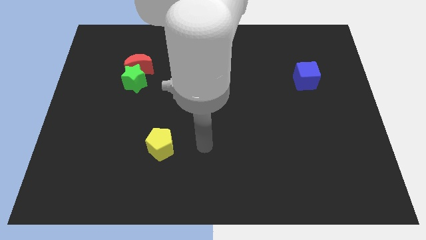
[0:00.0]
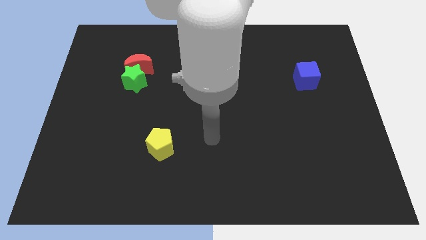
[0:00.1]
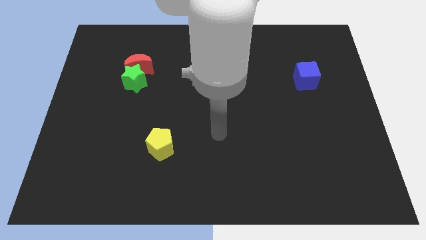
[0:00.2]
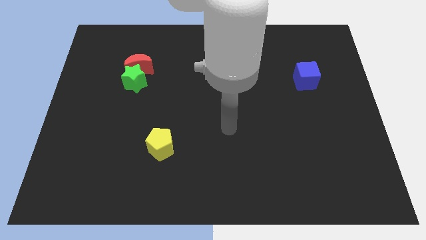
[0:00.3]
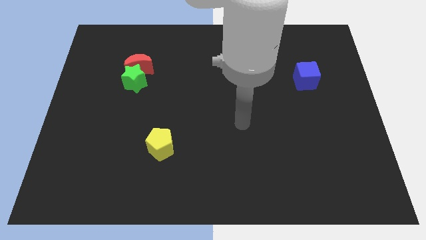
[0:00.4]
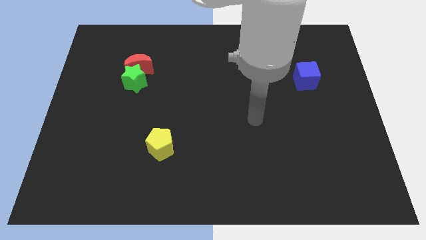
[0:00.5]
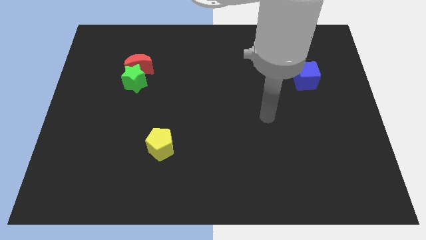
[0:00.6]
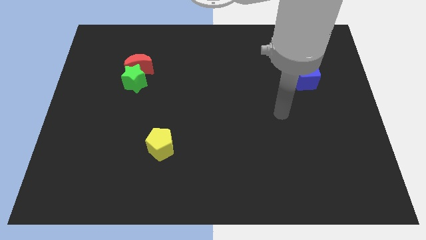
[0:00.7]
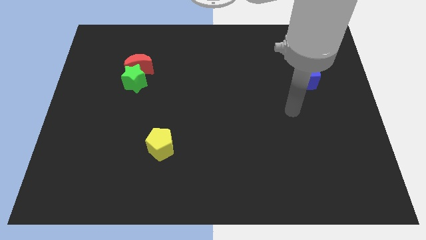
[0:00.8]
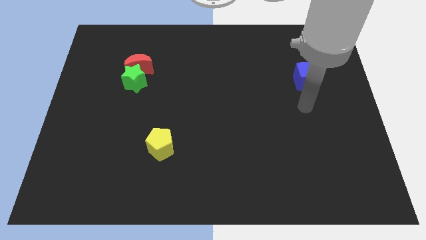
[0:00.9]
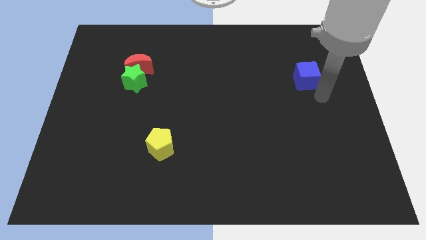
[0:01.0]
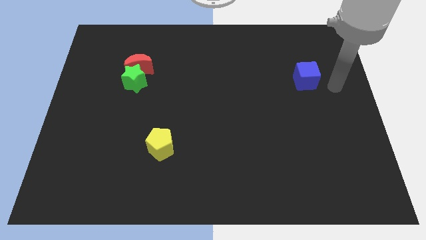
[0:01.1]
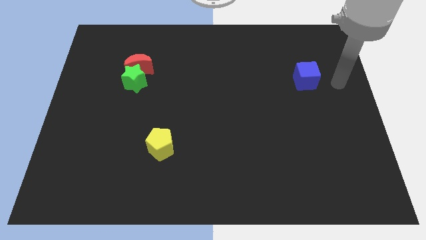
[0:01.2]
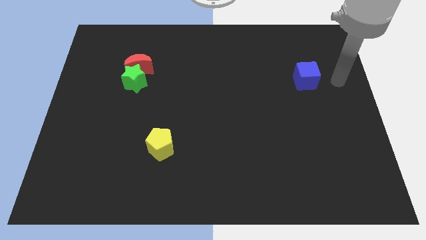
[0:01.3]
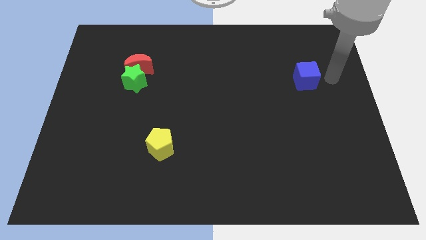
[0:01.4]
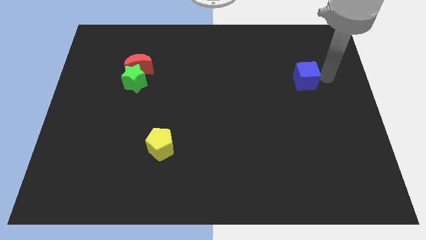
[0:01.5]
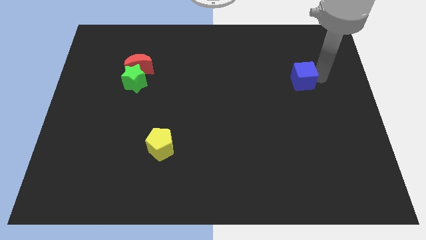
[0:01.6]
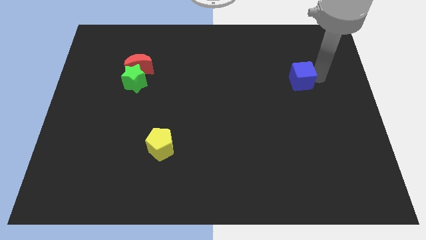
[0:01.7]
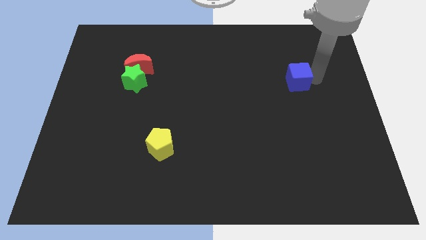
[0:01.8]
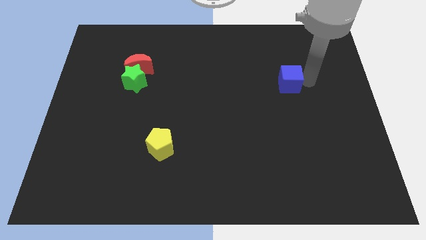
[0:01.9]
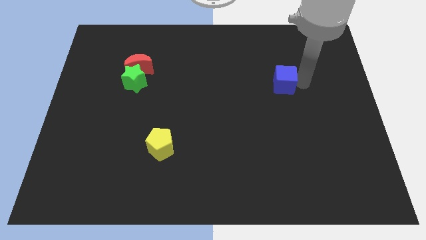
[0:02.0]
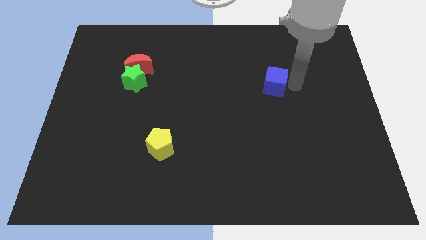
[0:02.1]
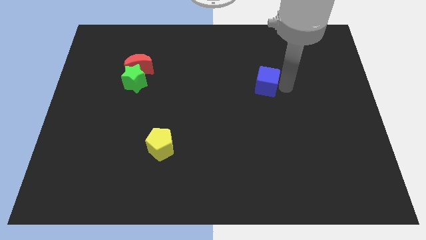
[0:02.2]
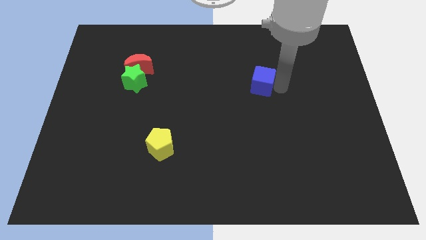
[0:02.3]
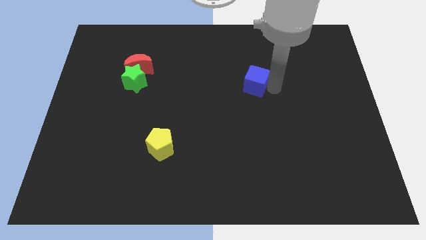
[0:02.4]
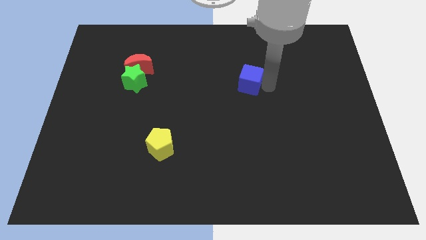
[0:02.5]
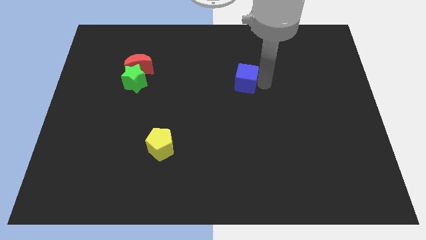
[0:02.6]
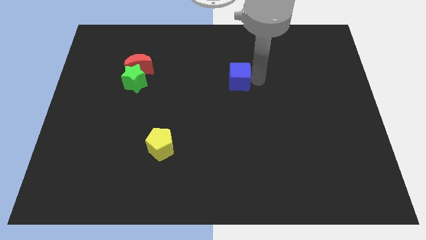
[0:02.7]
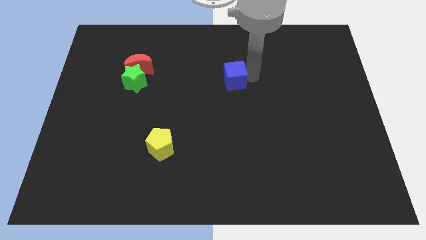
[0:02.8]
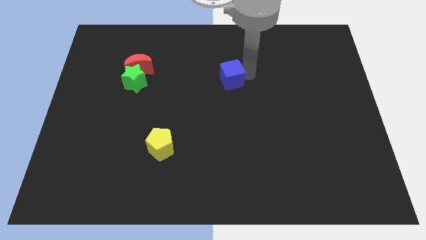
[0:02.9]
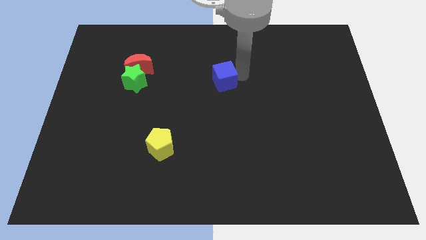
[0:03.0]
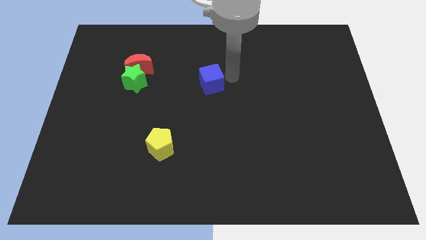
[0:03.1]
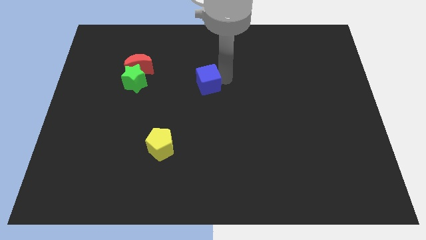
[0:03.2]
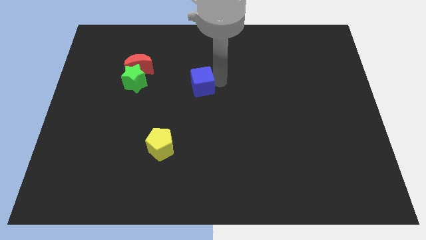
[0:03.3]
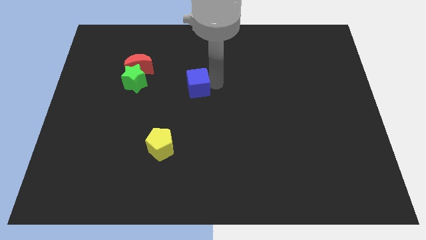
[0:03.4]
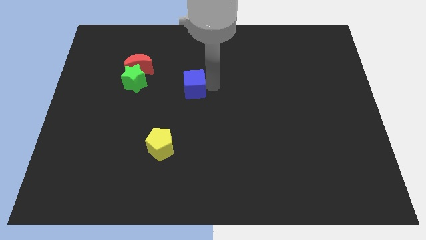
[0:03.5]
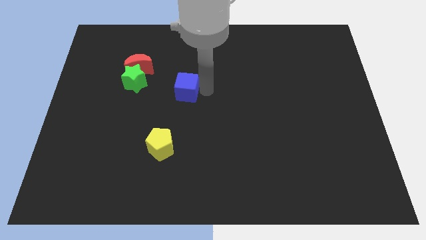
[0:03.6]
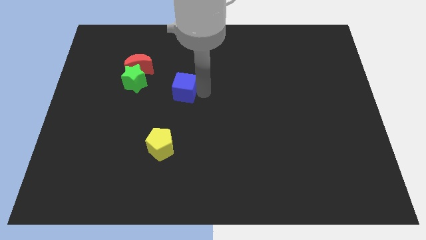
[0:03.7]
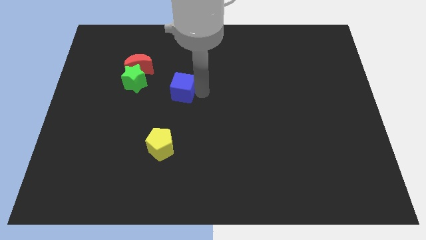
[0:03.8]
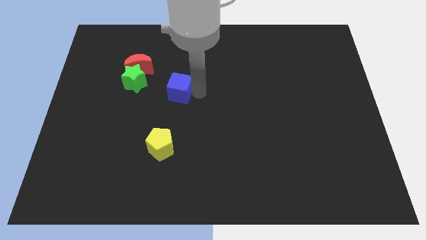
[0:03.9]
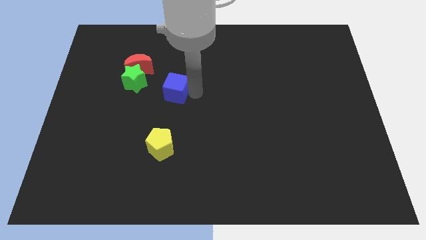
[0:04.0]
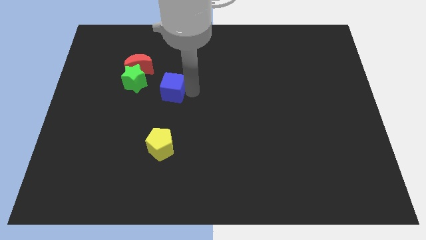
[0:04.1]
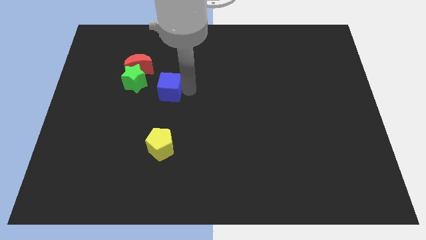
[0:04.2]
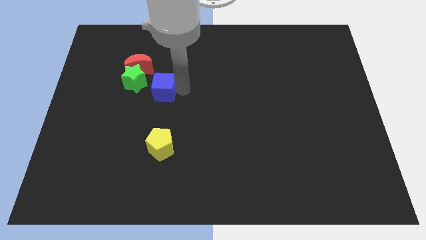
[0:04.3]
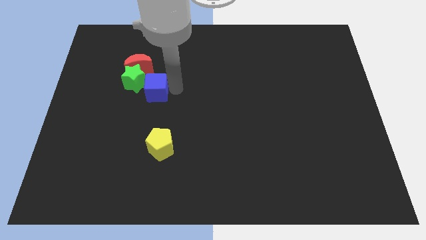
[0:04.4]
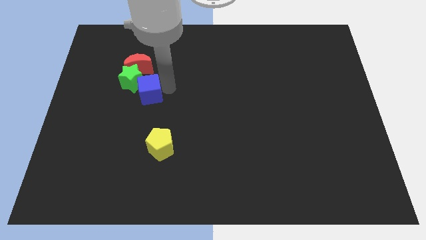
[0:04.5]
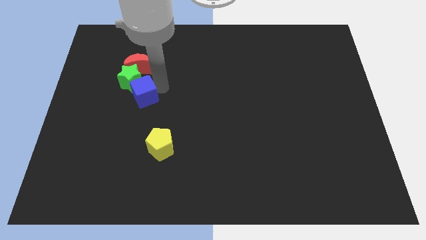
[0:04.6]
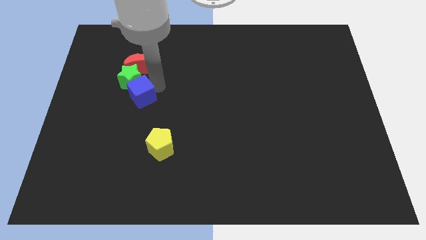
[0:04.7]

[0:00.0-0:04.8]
slide the cube to the green star

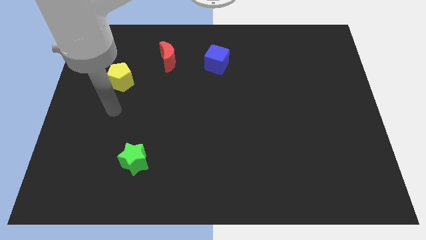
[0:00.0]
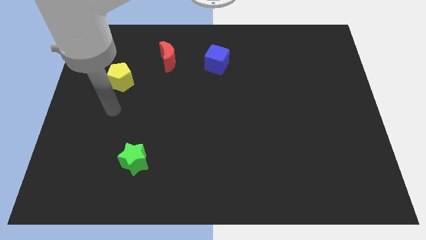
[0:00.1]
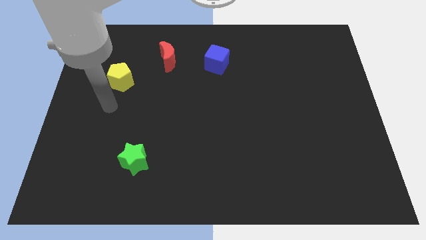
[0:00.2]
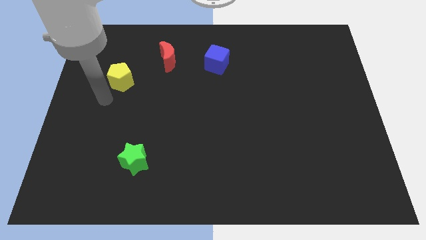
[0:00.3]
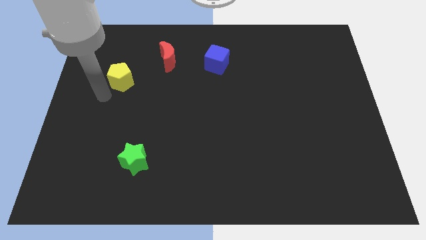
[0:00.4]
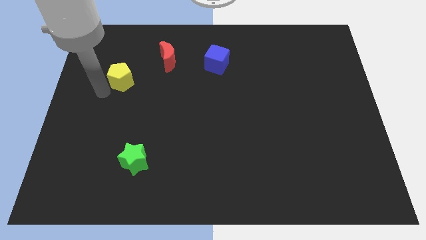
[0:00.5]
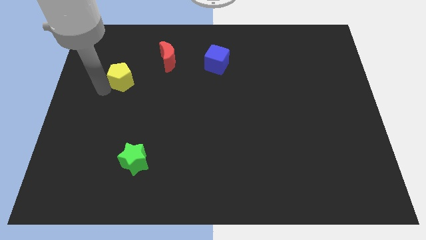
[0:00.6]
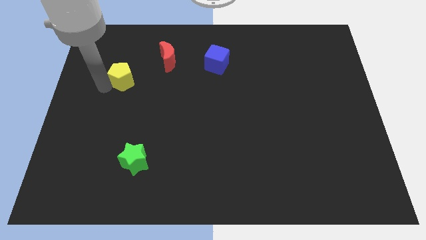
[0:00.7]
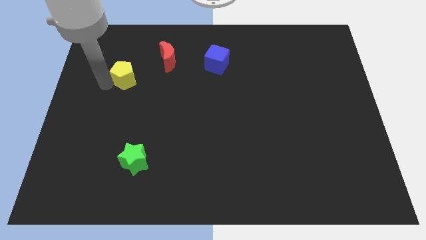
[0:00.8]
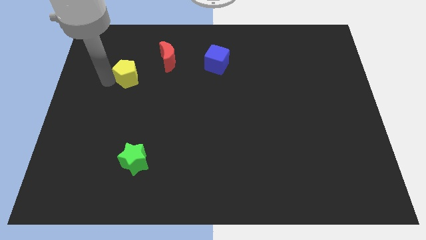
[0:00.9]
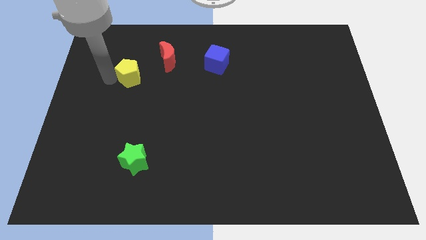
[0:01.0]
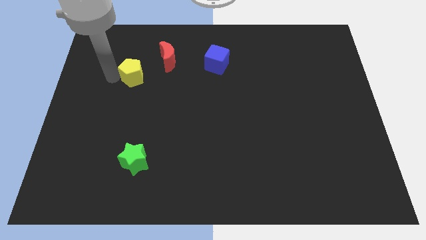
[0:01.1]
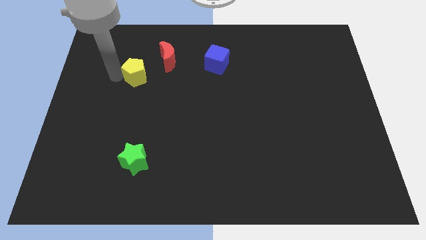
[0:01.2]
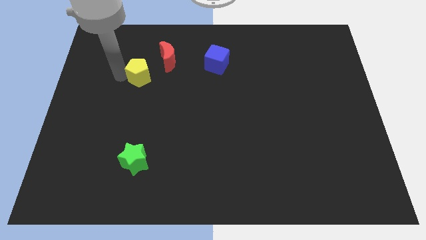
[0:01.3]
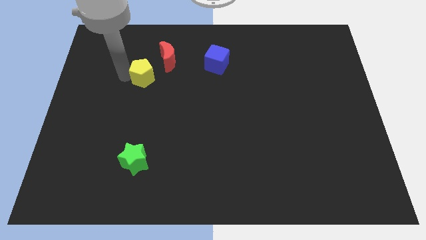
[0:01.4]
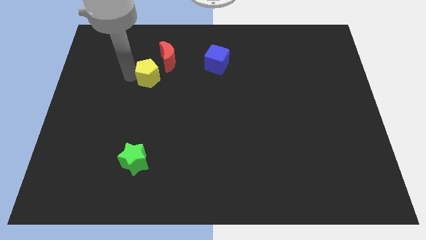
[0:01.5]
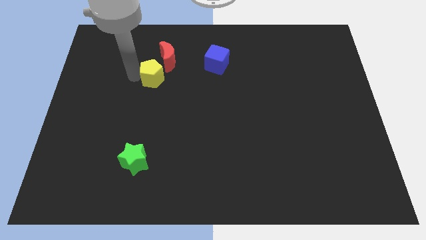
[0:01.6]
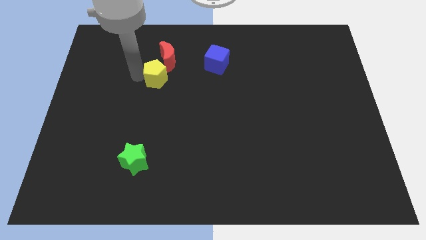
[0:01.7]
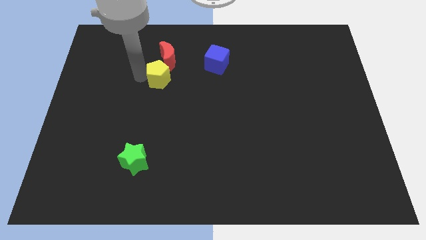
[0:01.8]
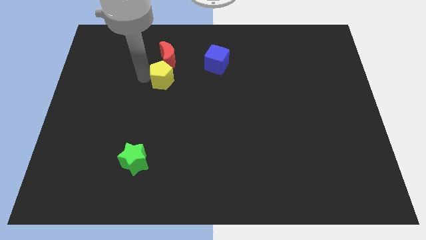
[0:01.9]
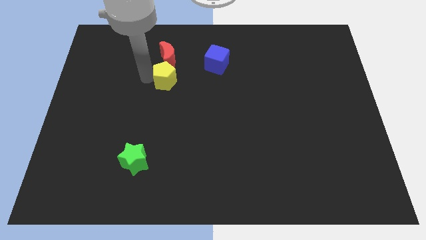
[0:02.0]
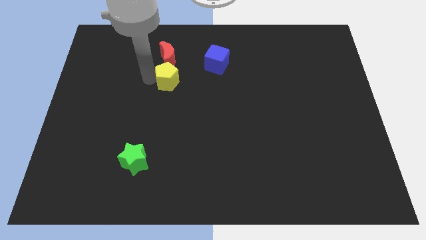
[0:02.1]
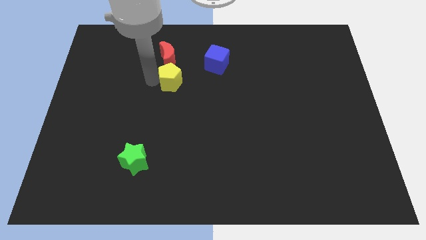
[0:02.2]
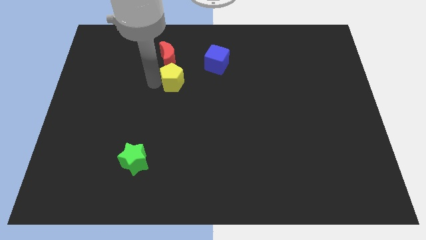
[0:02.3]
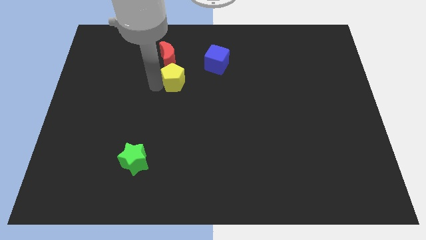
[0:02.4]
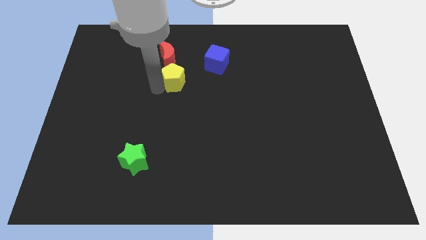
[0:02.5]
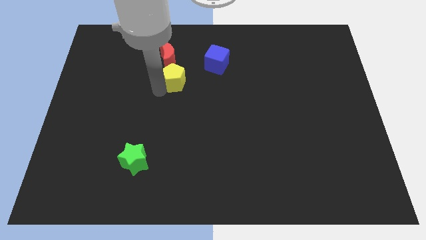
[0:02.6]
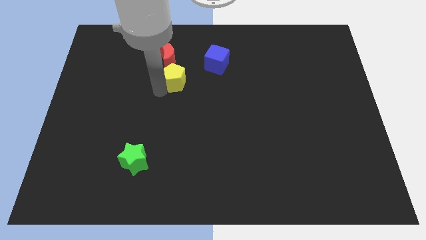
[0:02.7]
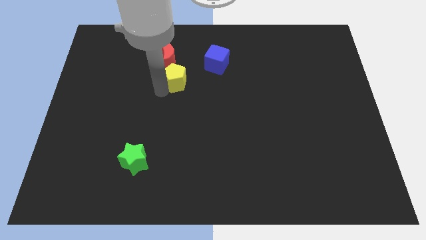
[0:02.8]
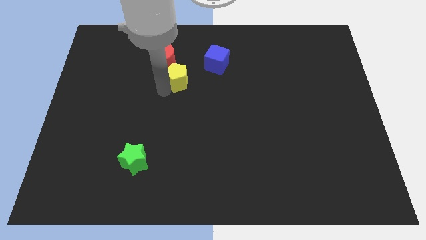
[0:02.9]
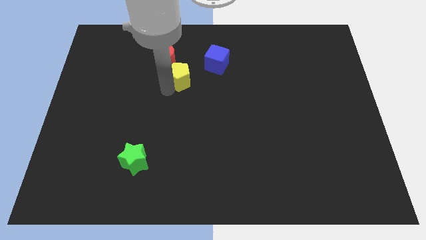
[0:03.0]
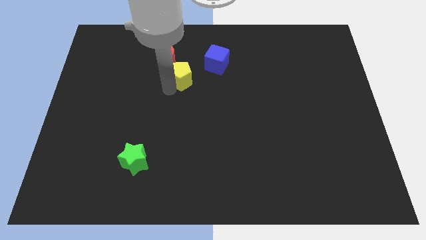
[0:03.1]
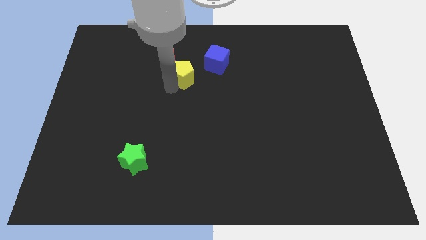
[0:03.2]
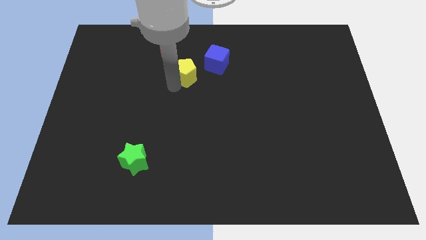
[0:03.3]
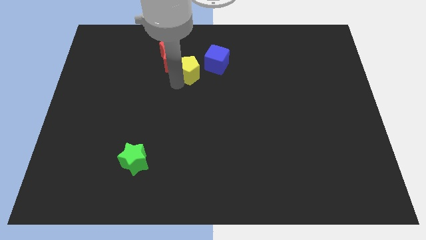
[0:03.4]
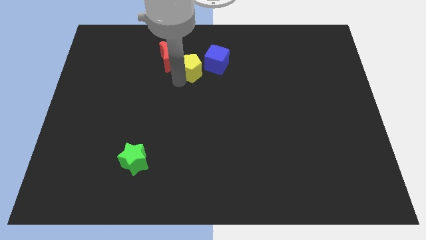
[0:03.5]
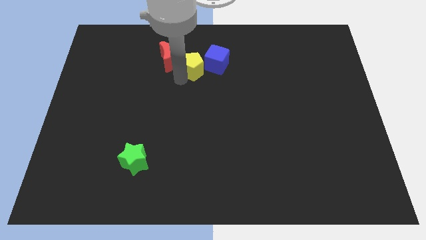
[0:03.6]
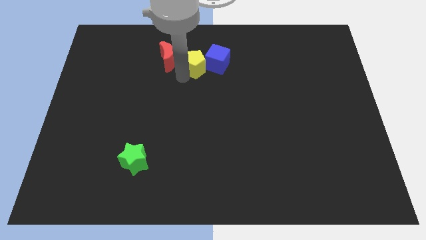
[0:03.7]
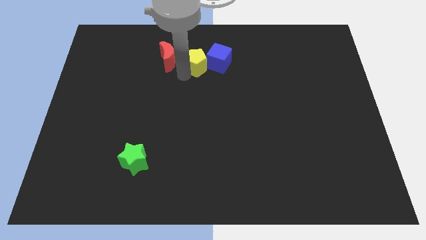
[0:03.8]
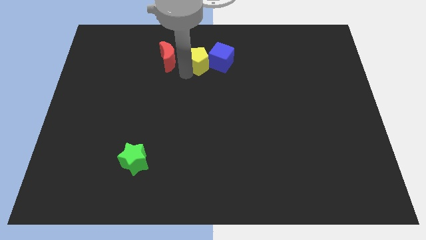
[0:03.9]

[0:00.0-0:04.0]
put the yellow pentagon close to the cube
